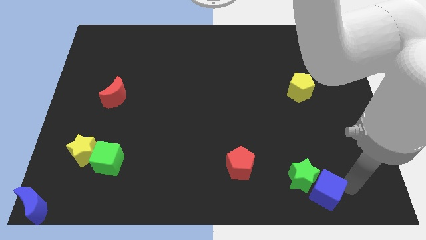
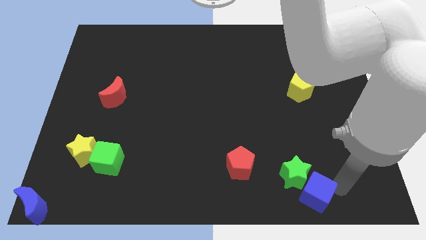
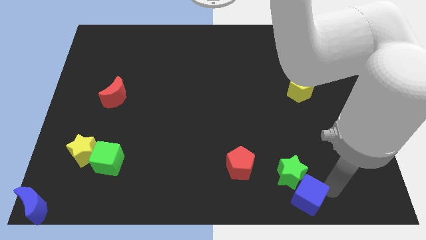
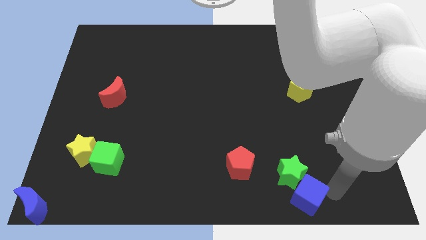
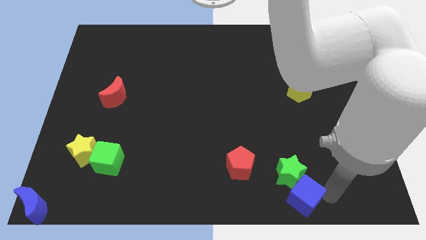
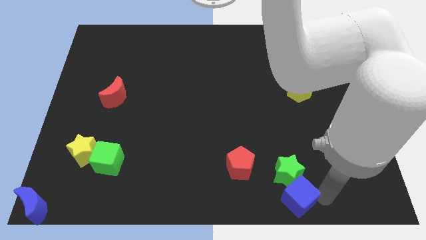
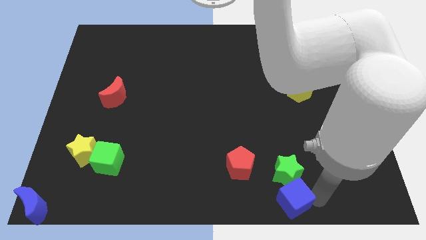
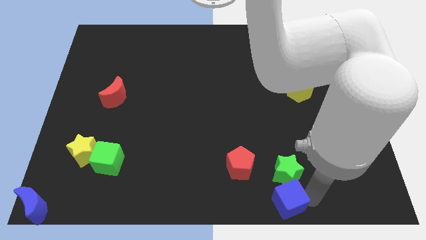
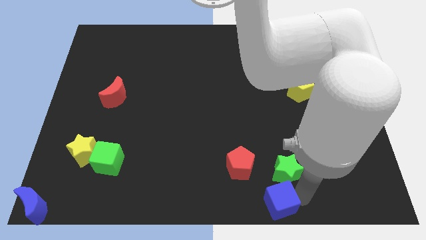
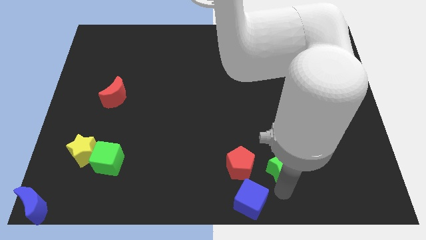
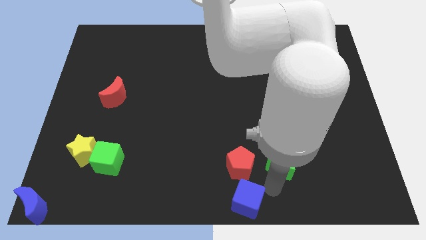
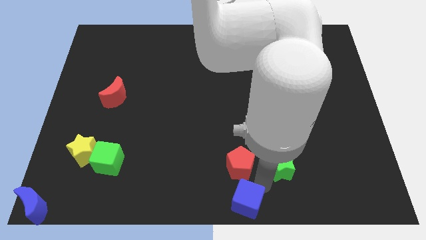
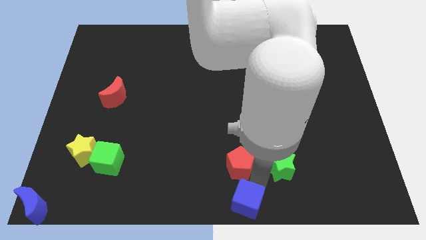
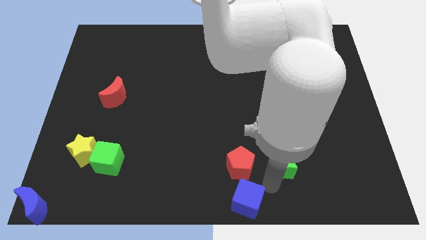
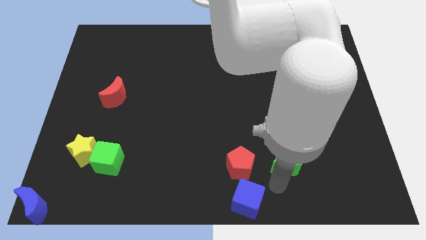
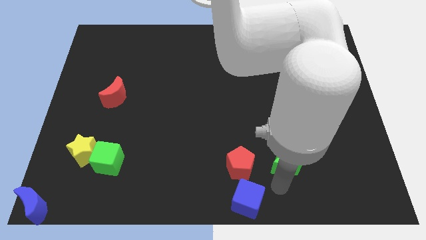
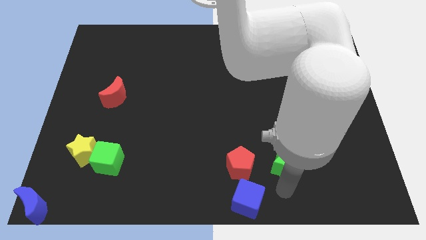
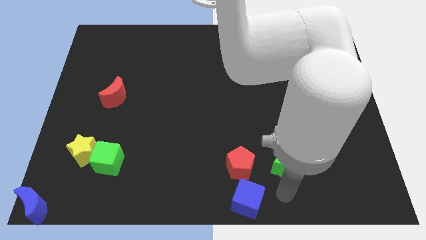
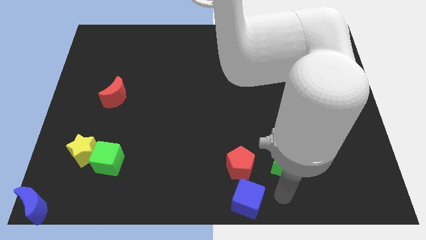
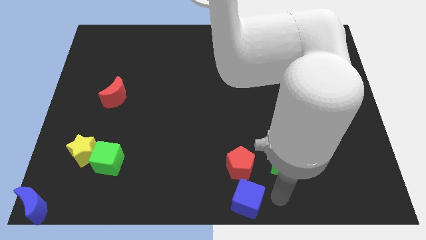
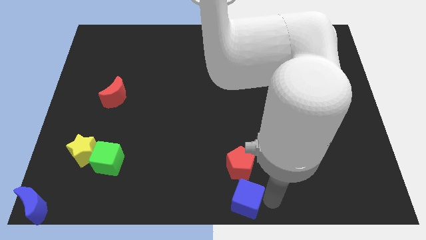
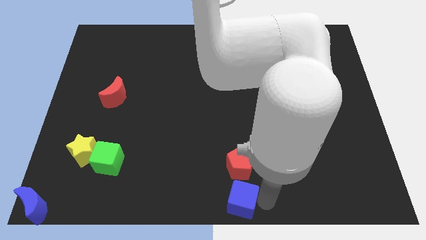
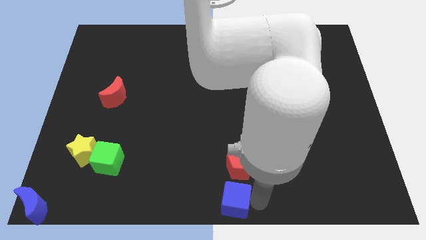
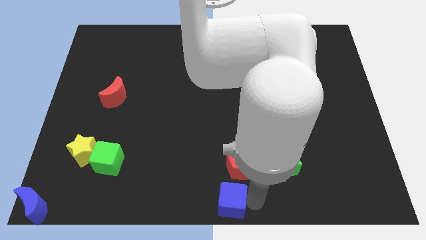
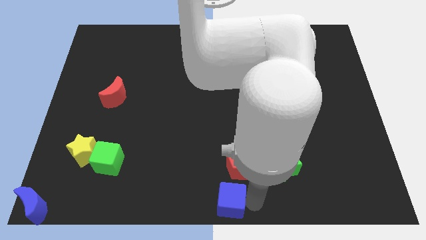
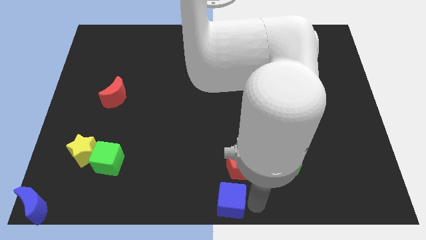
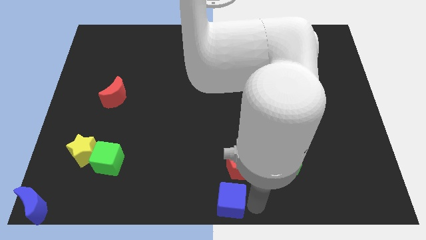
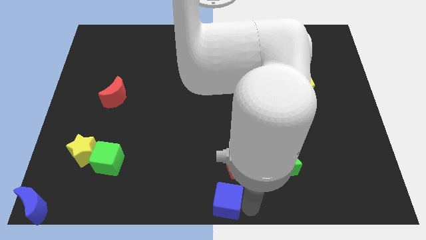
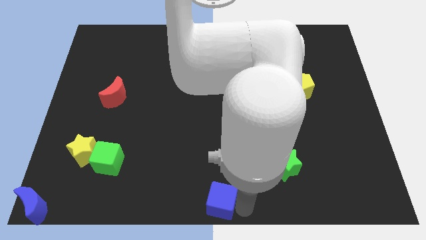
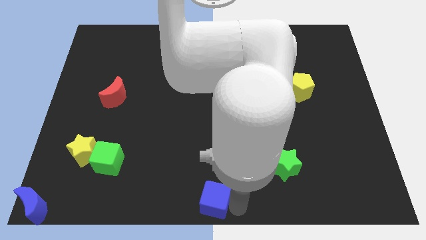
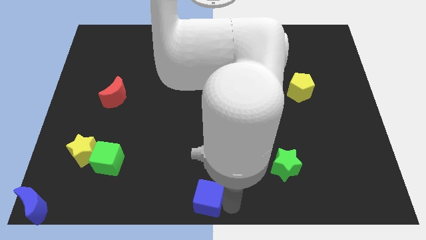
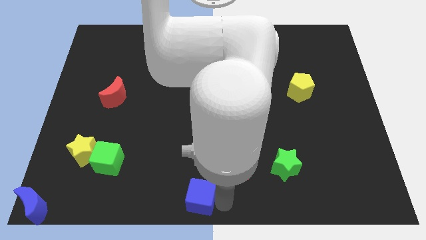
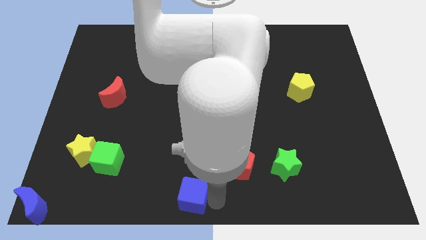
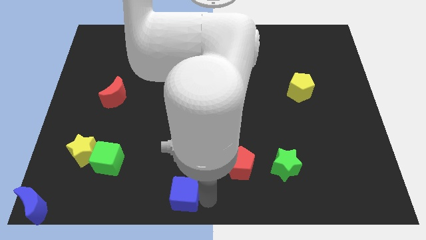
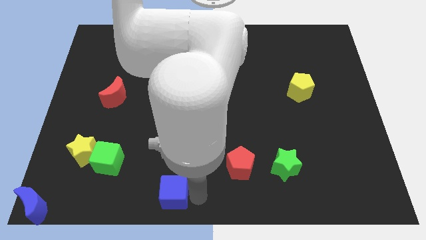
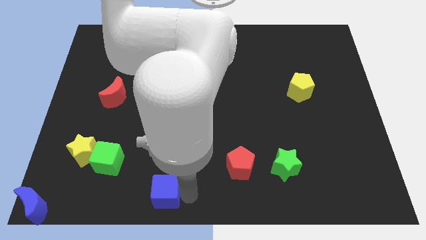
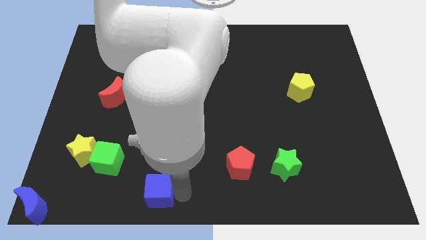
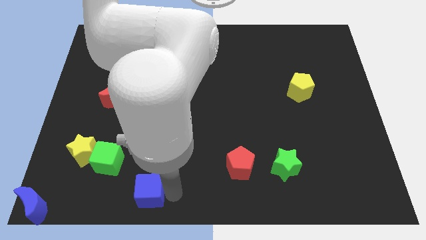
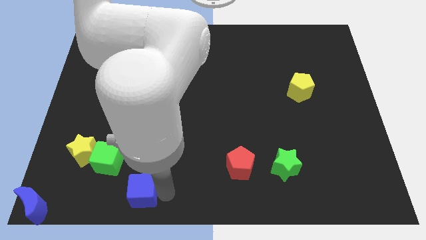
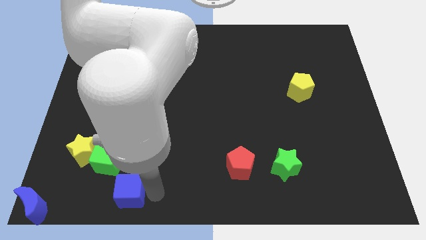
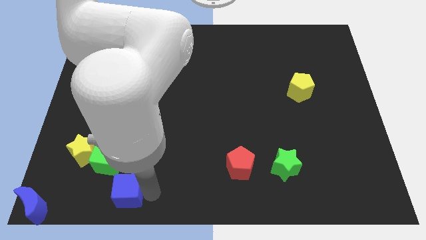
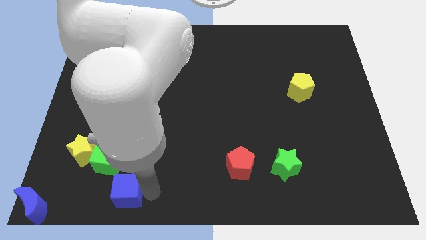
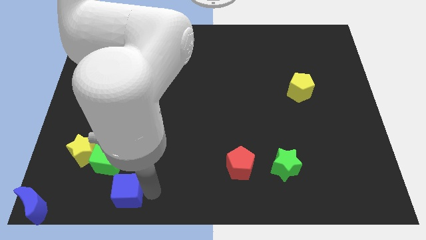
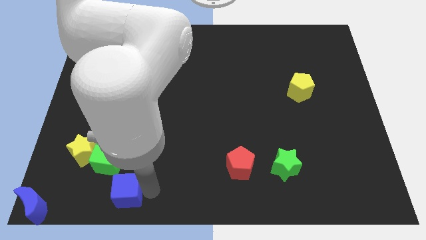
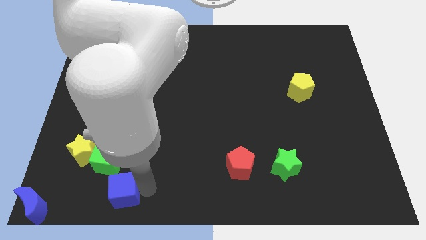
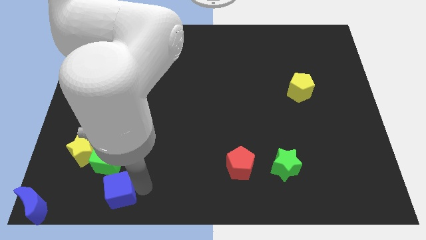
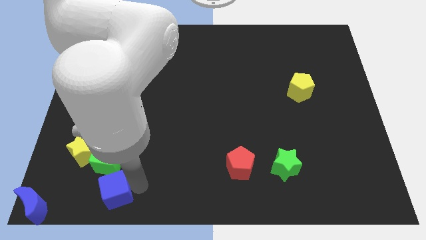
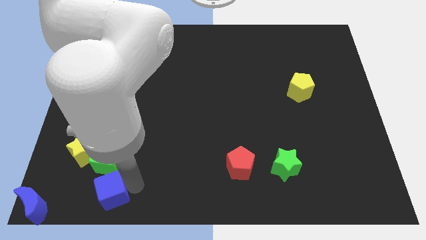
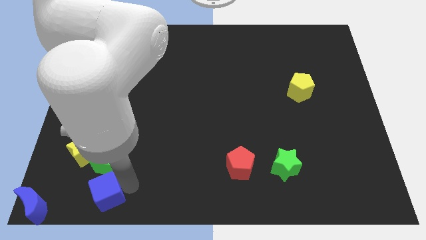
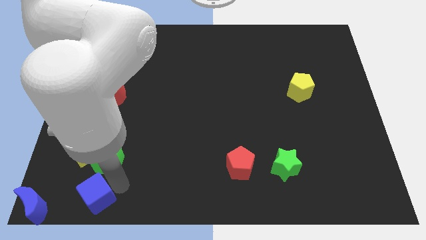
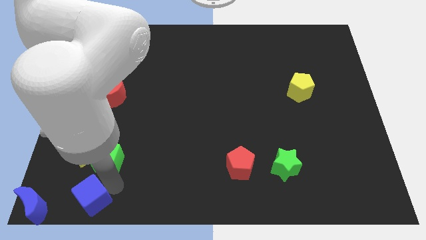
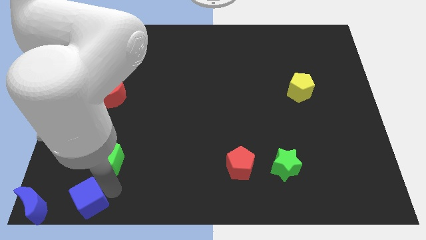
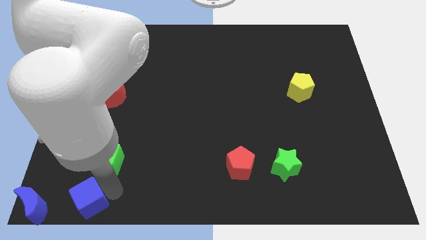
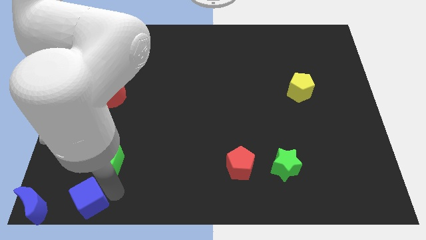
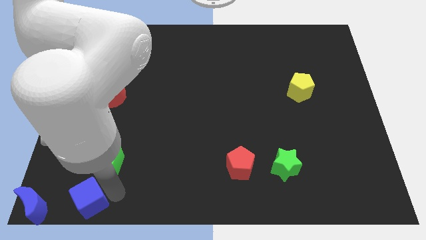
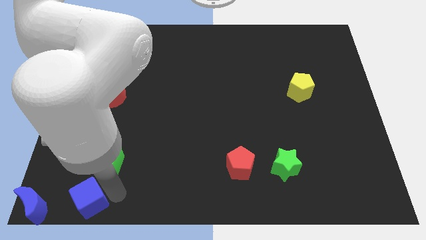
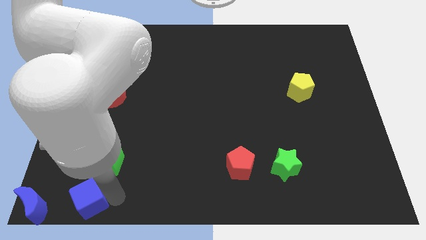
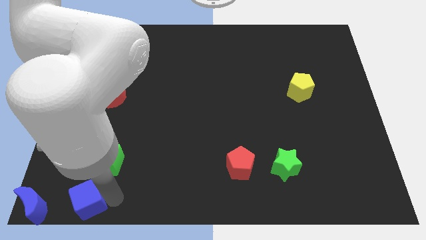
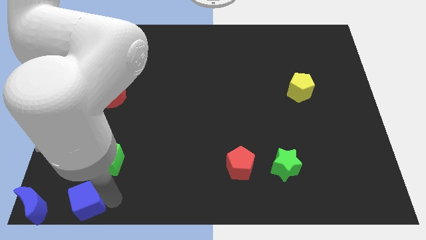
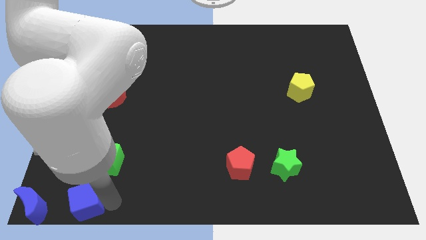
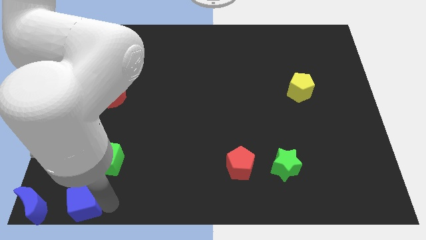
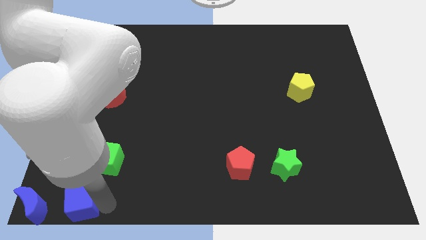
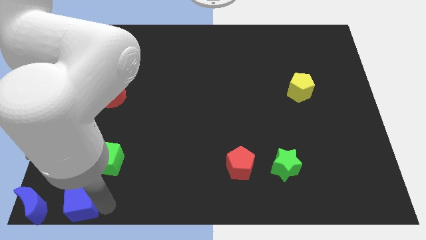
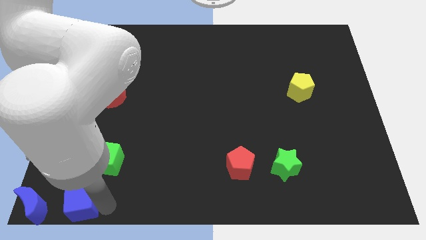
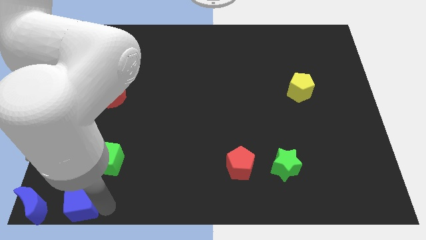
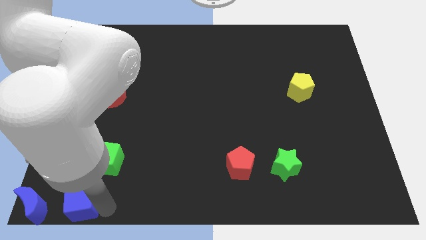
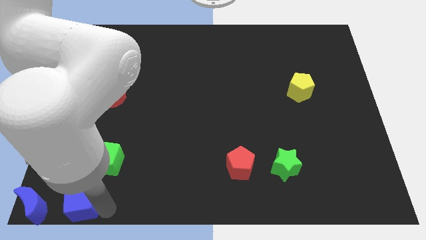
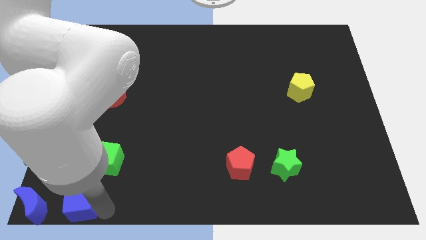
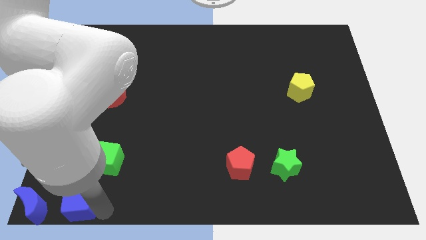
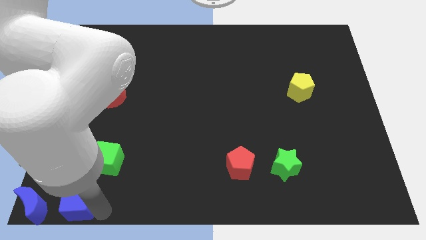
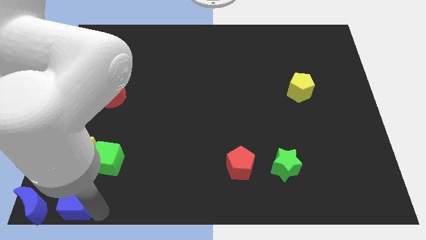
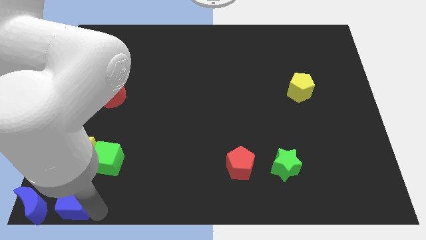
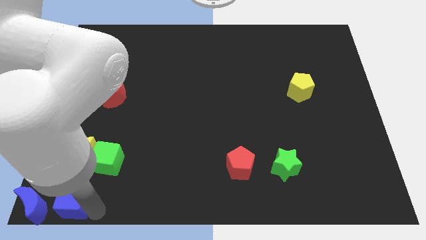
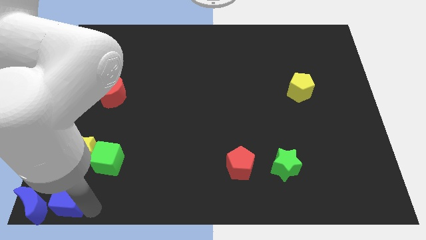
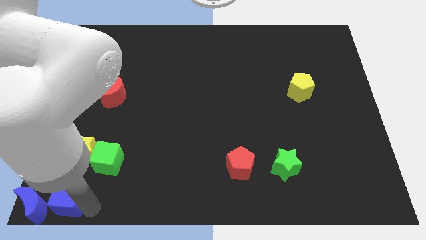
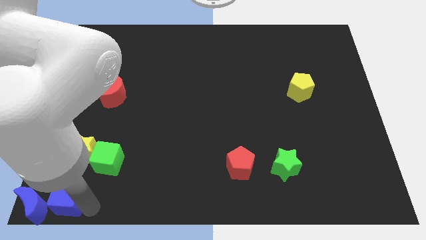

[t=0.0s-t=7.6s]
push the blue cube to the right of the blue crescent

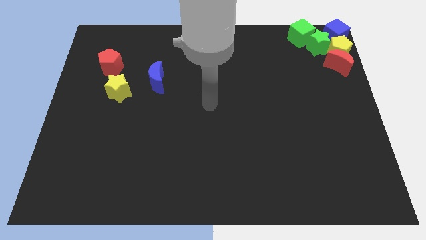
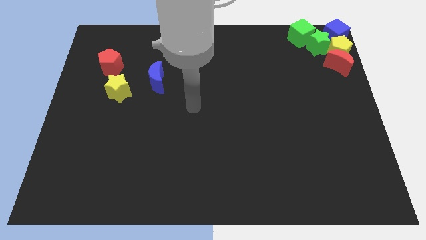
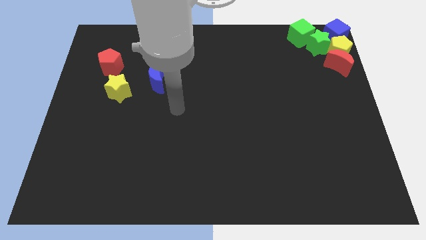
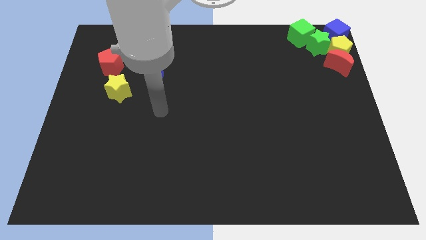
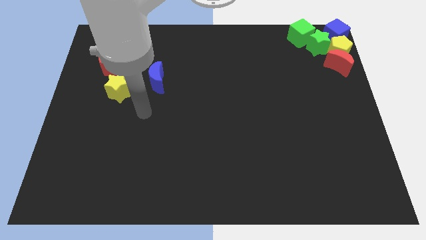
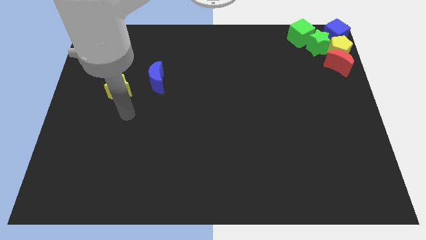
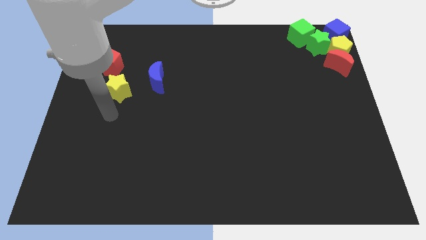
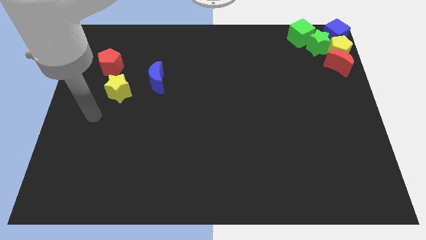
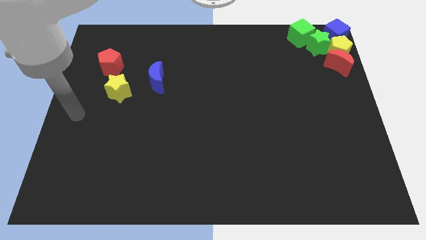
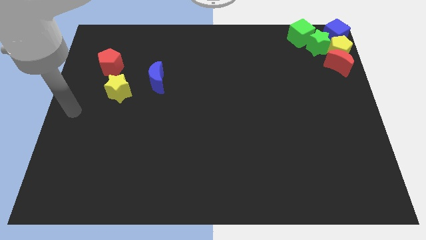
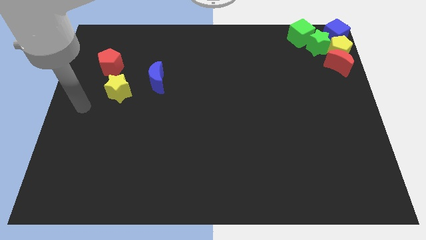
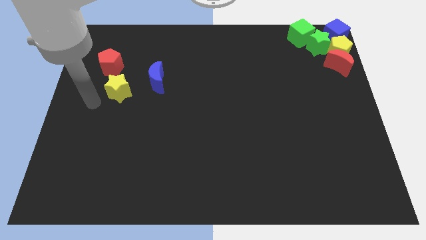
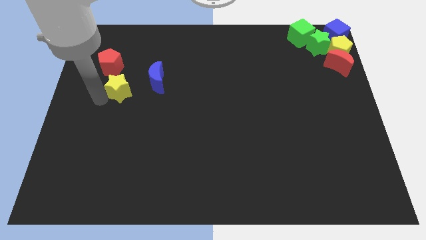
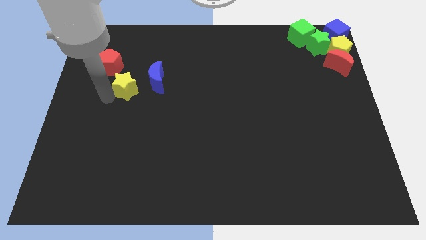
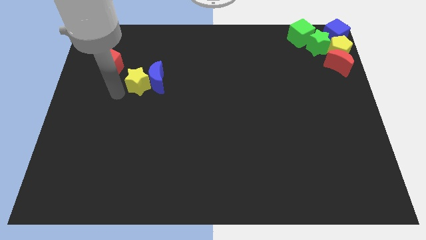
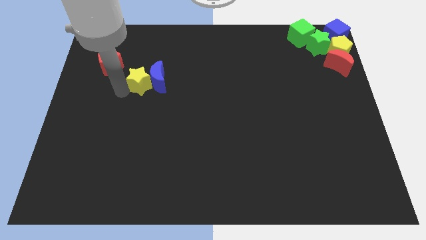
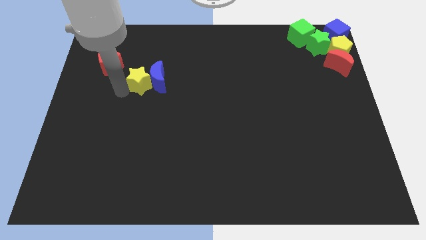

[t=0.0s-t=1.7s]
slide the yellow star into the left side of the blue crescent
